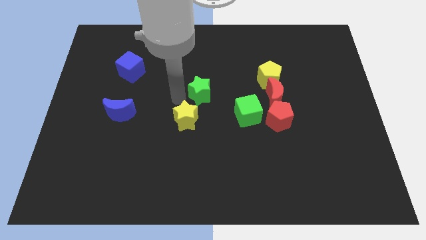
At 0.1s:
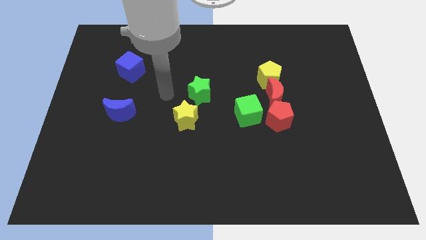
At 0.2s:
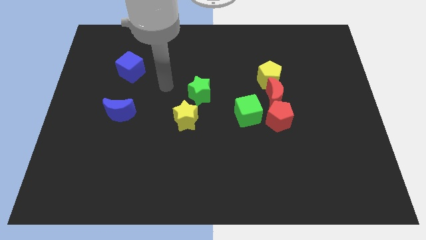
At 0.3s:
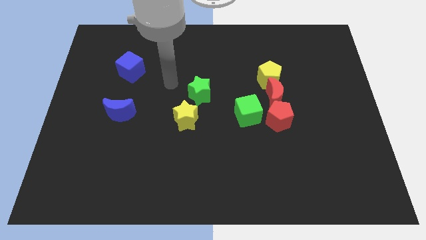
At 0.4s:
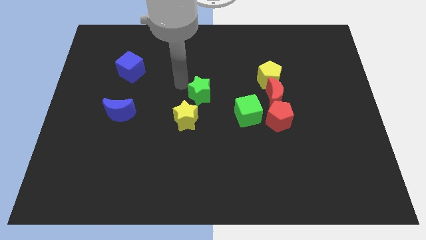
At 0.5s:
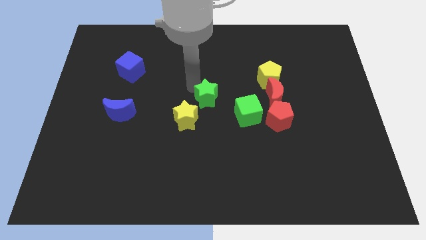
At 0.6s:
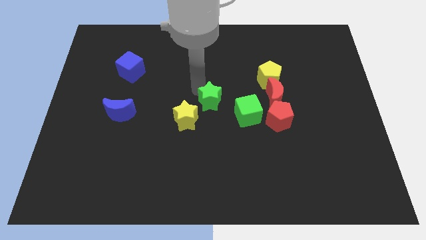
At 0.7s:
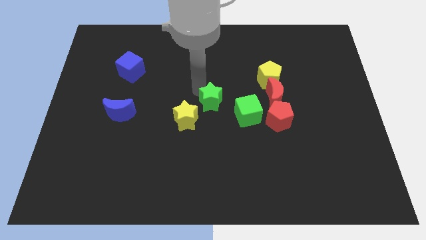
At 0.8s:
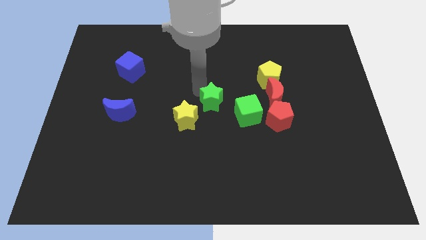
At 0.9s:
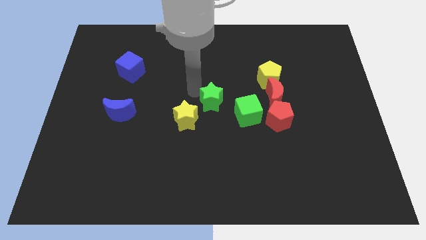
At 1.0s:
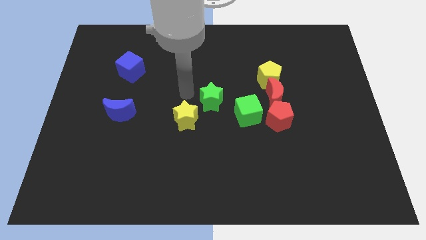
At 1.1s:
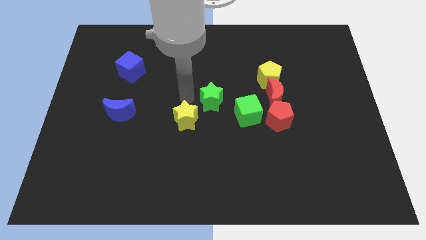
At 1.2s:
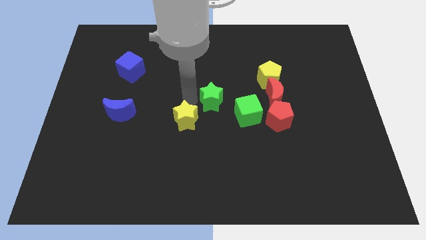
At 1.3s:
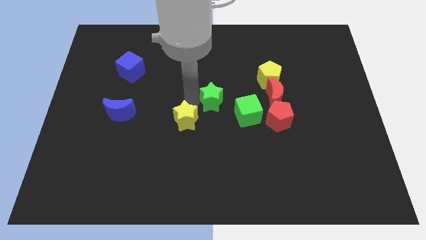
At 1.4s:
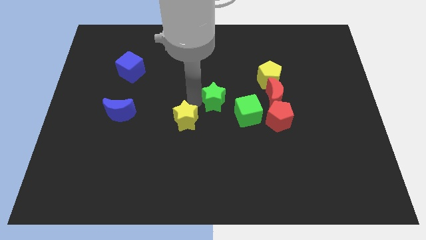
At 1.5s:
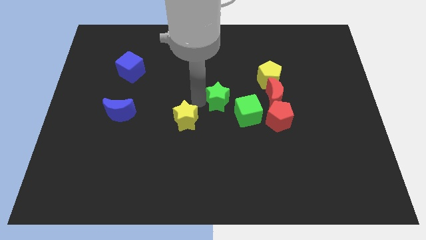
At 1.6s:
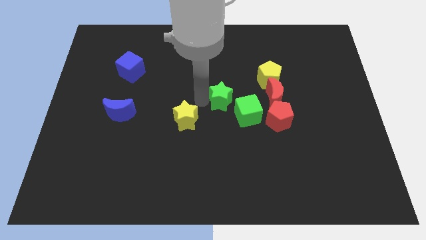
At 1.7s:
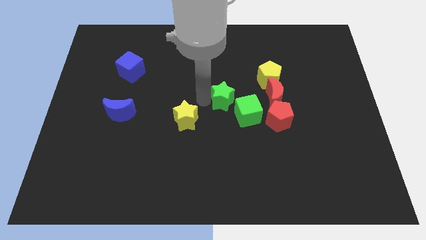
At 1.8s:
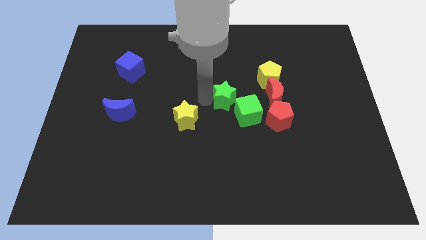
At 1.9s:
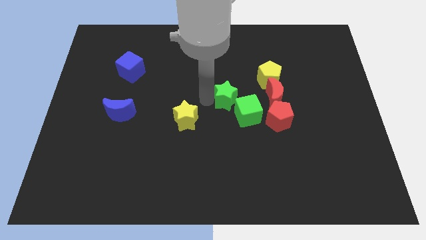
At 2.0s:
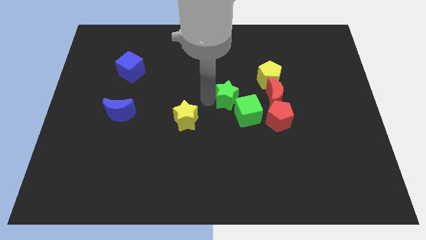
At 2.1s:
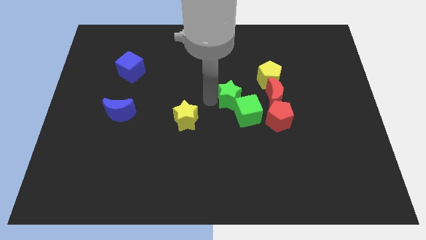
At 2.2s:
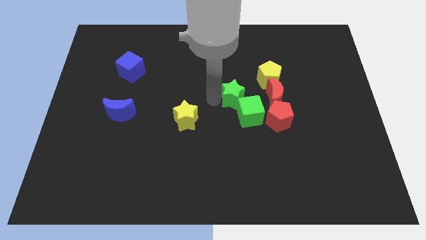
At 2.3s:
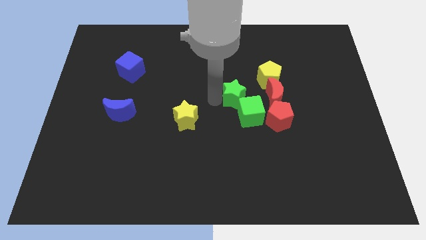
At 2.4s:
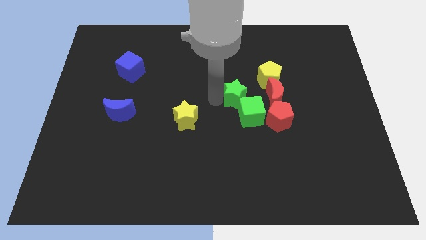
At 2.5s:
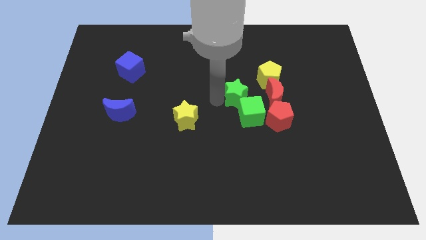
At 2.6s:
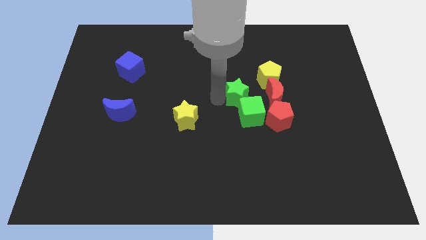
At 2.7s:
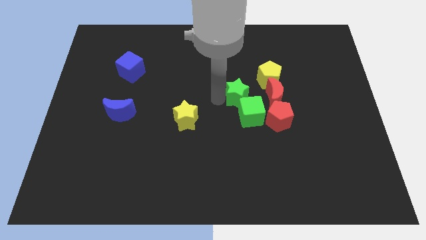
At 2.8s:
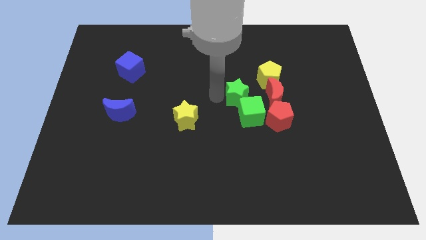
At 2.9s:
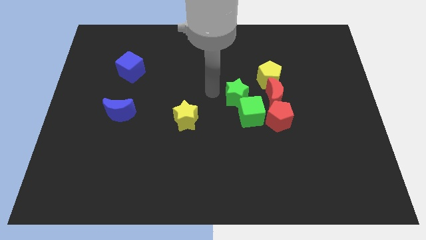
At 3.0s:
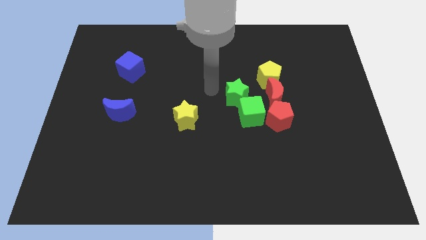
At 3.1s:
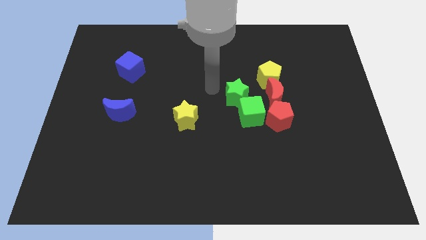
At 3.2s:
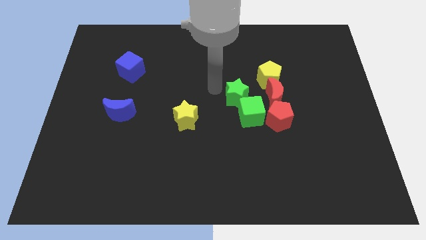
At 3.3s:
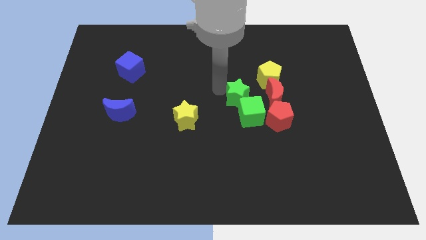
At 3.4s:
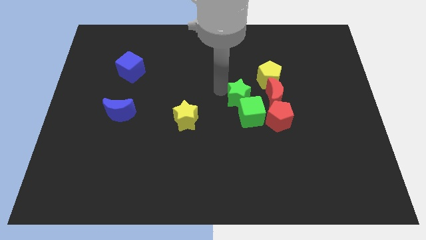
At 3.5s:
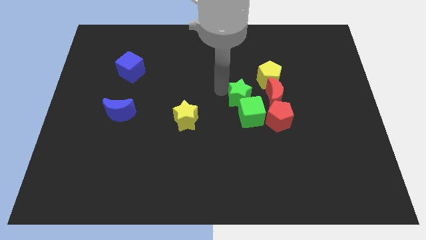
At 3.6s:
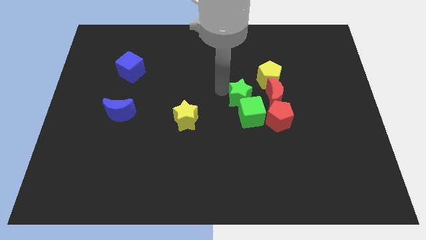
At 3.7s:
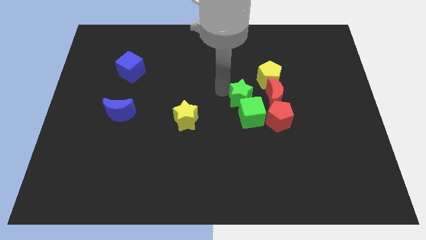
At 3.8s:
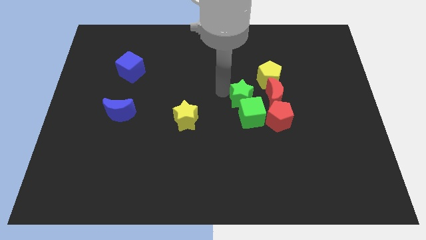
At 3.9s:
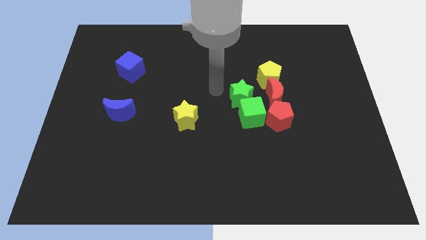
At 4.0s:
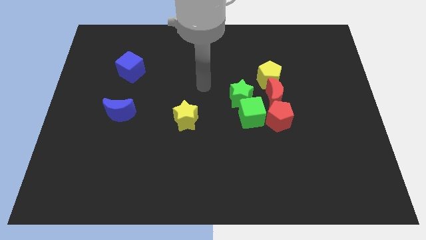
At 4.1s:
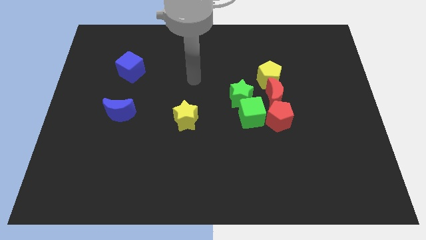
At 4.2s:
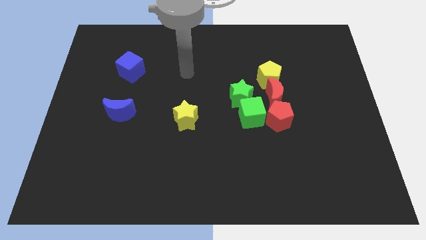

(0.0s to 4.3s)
push the green star to the top of the green cube

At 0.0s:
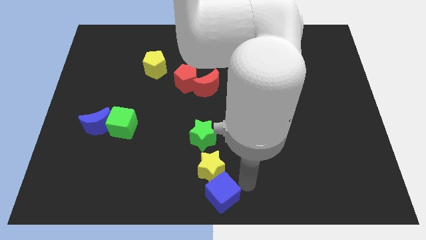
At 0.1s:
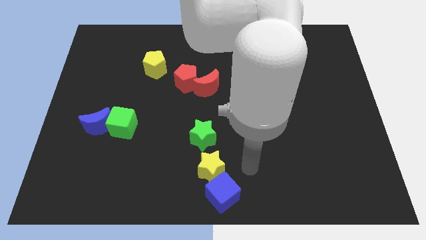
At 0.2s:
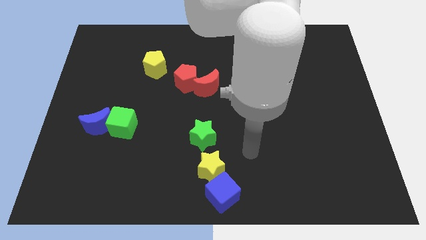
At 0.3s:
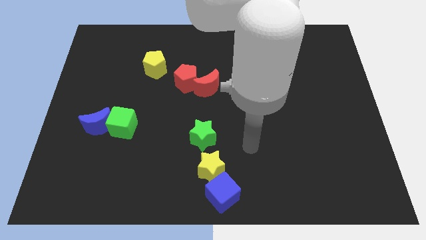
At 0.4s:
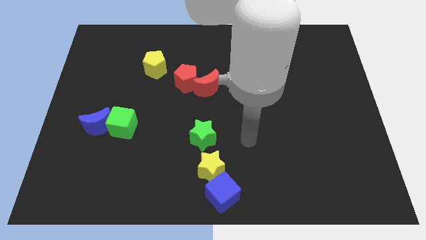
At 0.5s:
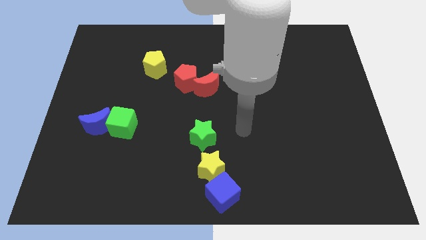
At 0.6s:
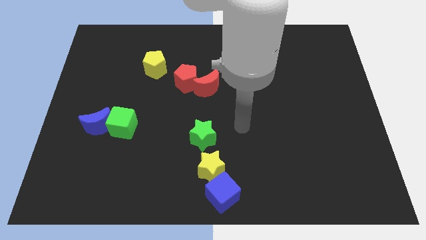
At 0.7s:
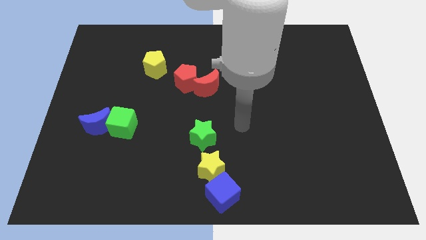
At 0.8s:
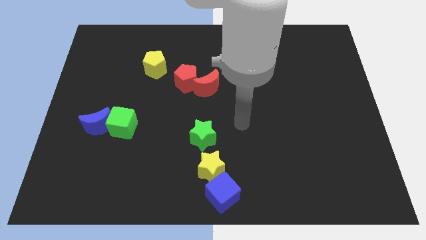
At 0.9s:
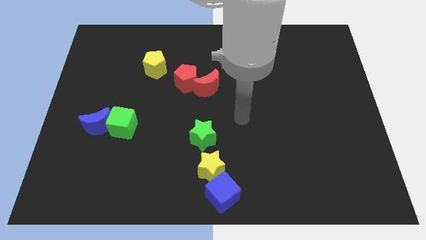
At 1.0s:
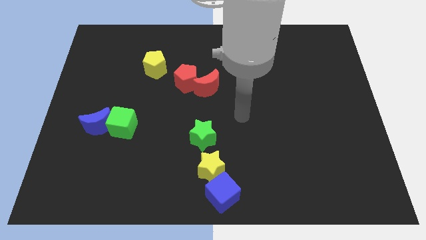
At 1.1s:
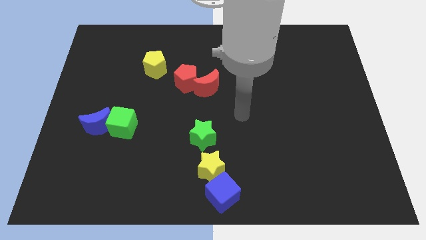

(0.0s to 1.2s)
move your arm away from blue cube

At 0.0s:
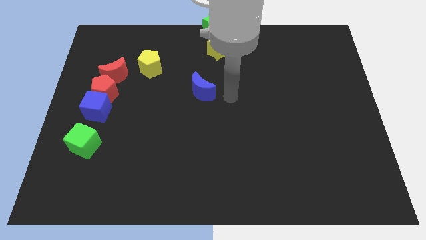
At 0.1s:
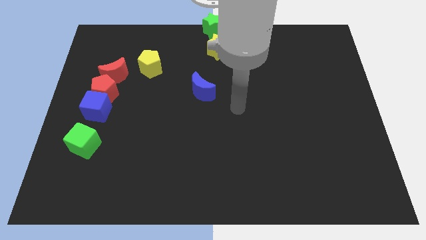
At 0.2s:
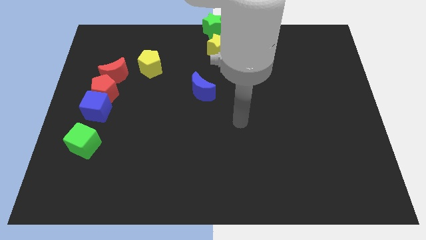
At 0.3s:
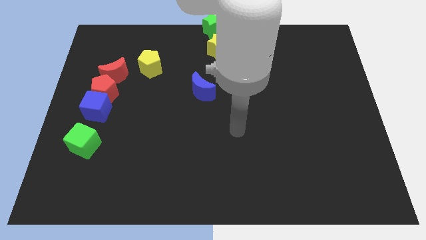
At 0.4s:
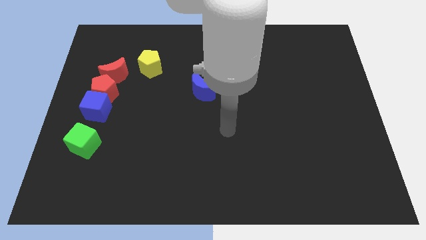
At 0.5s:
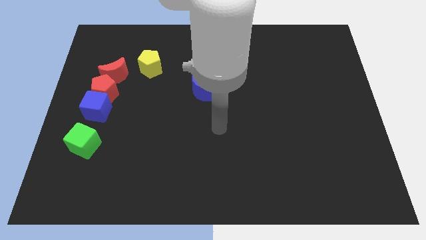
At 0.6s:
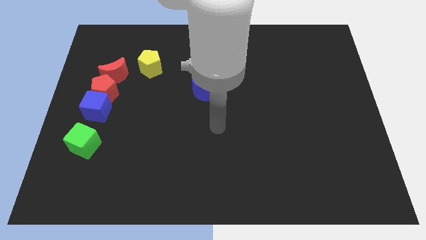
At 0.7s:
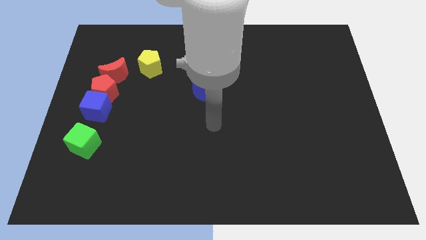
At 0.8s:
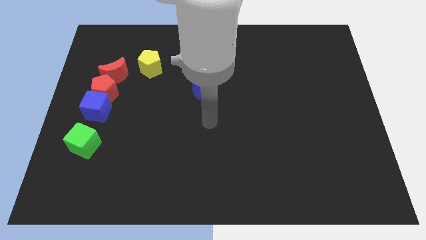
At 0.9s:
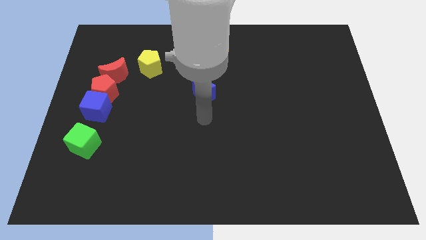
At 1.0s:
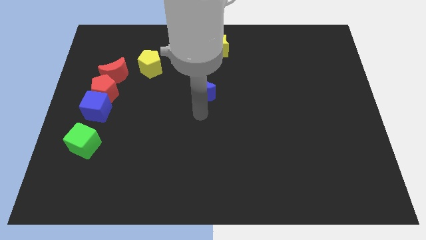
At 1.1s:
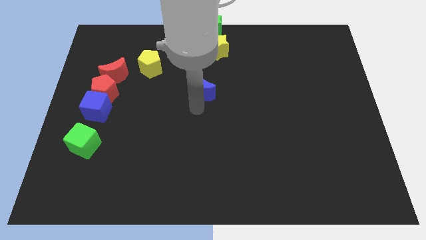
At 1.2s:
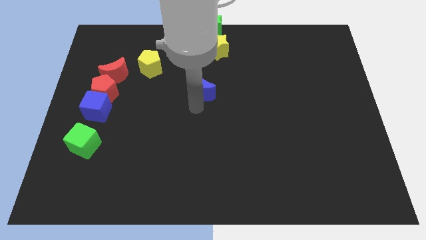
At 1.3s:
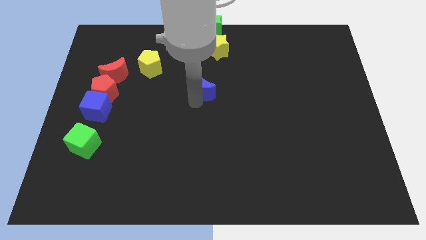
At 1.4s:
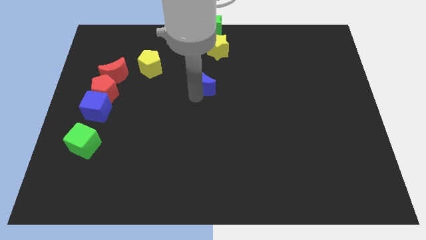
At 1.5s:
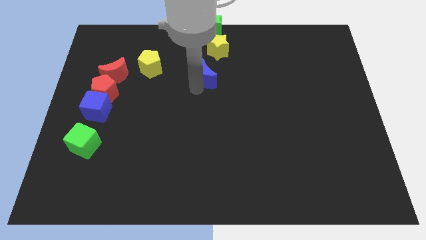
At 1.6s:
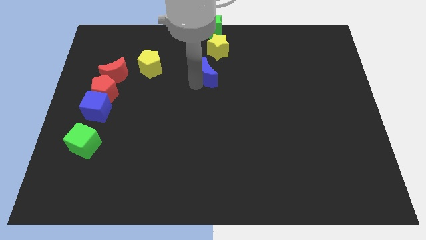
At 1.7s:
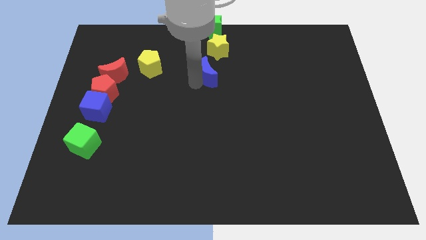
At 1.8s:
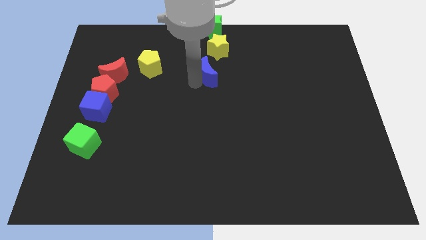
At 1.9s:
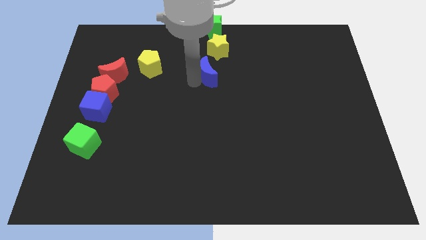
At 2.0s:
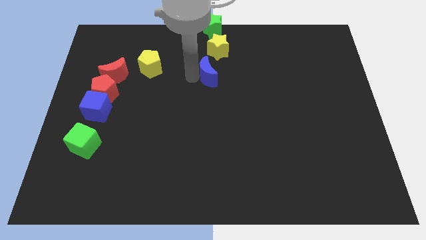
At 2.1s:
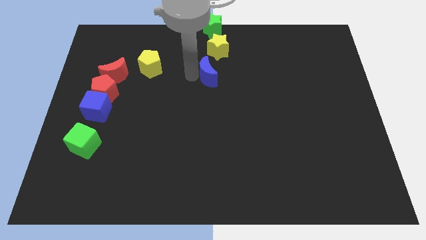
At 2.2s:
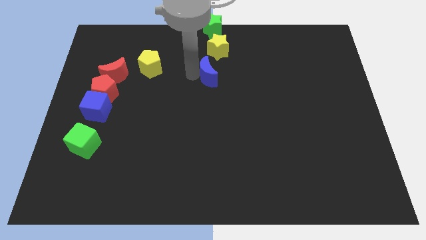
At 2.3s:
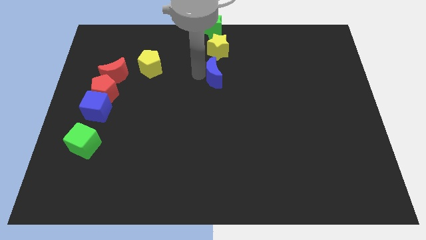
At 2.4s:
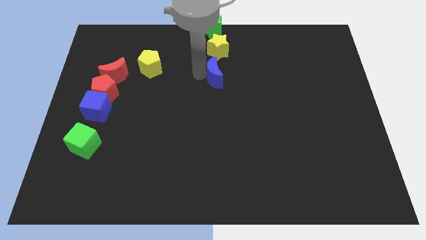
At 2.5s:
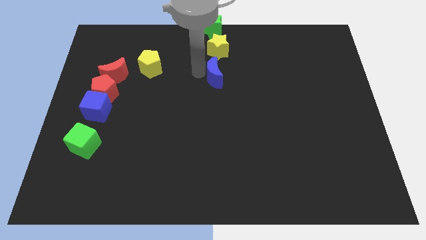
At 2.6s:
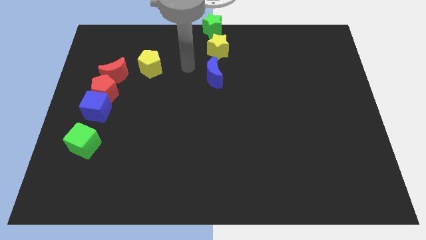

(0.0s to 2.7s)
push the blue crescent under to the yellow star

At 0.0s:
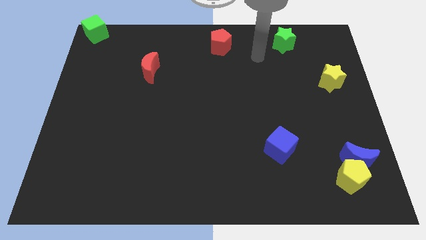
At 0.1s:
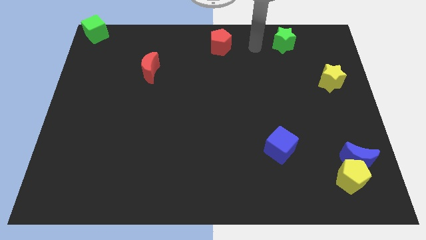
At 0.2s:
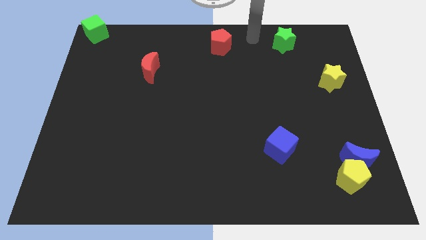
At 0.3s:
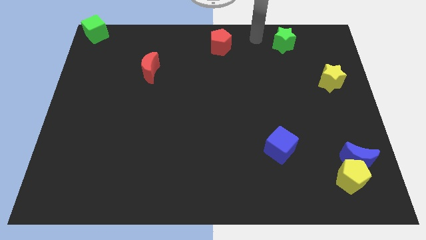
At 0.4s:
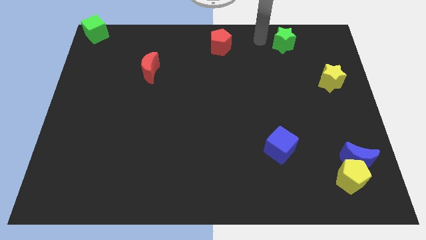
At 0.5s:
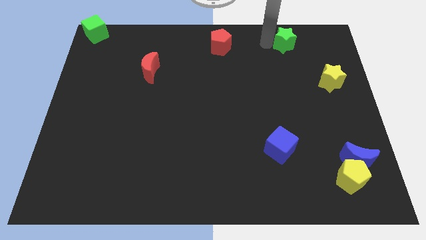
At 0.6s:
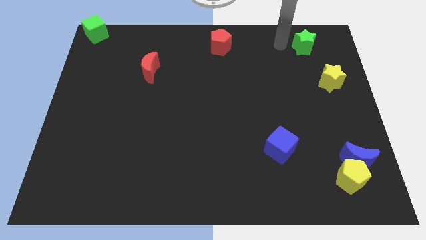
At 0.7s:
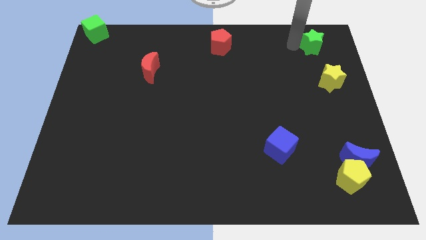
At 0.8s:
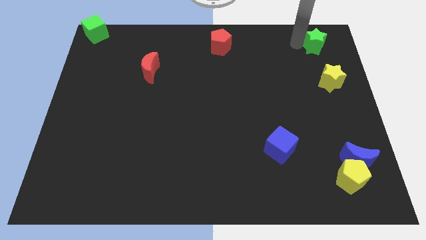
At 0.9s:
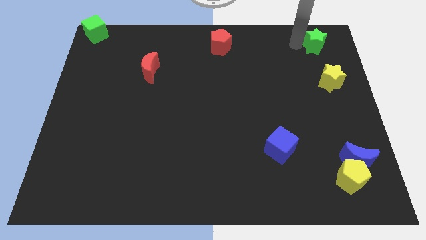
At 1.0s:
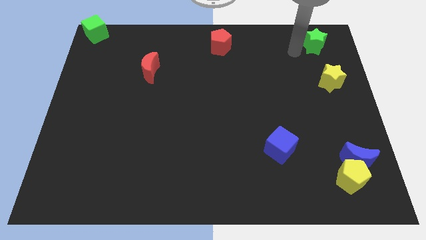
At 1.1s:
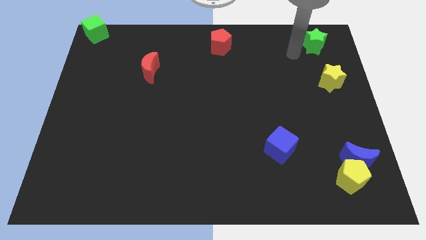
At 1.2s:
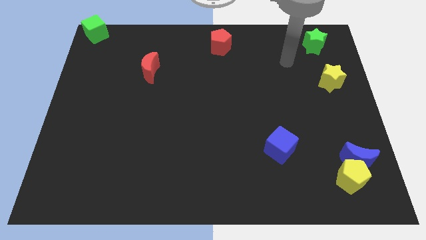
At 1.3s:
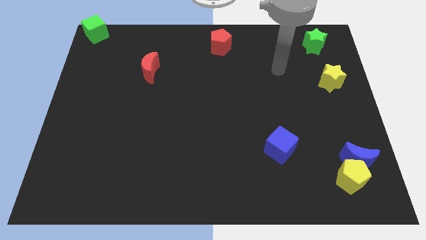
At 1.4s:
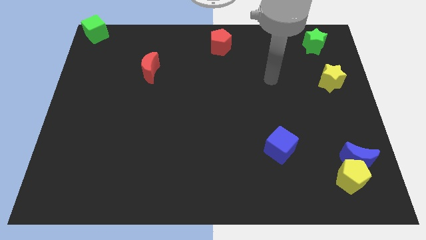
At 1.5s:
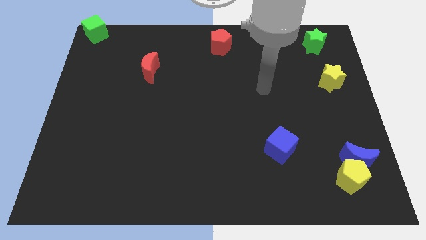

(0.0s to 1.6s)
push the green star to the top right corner
